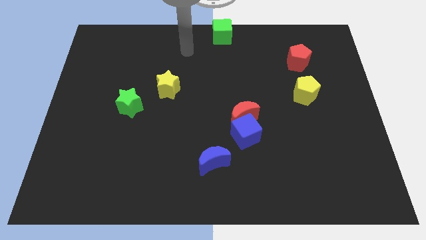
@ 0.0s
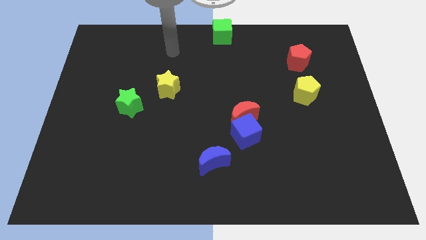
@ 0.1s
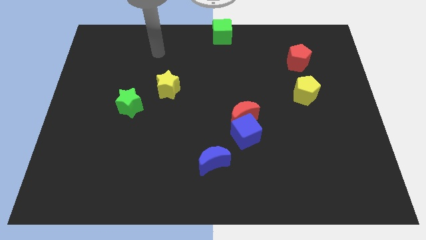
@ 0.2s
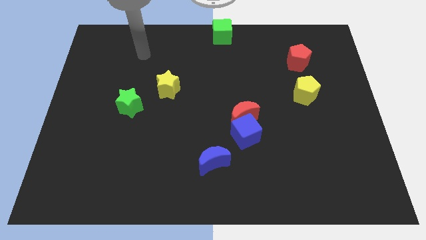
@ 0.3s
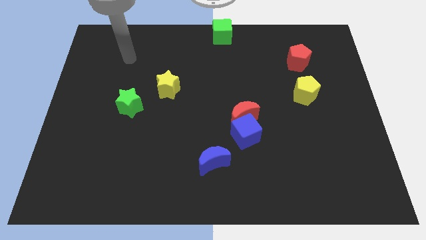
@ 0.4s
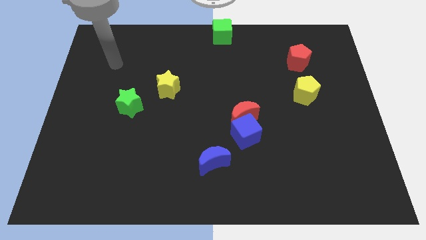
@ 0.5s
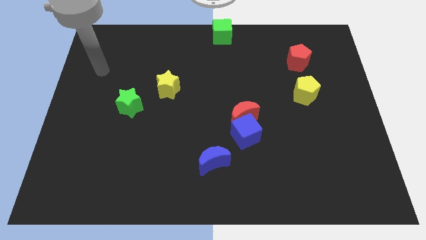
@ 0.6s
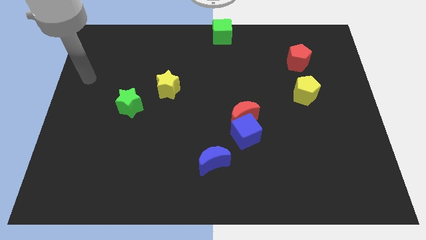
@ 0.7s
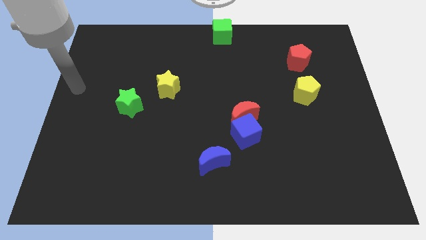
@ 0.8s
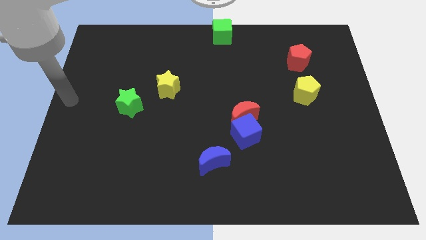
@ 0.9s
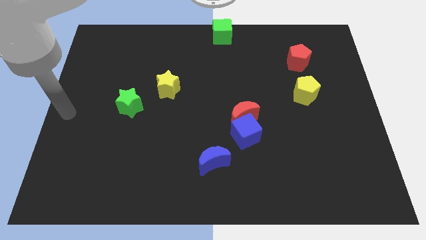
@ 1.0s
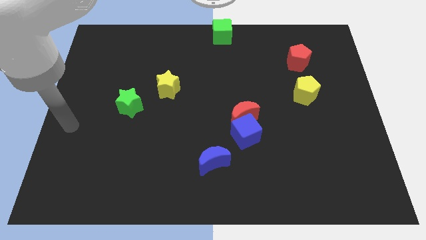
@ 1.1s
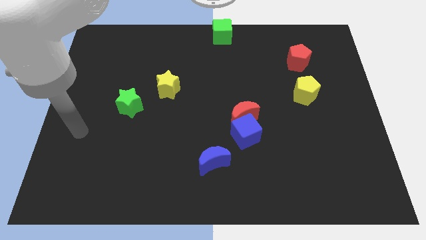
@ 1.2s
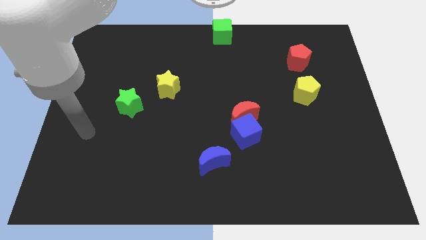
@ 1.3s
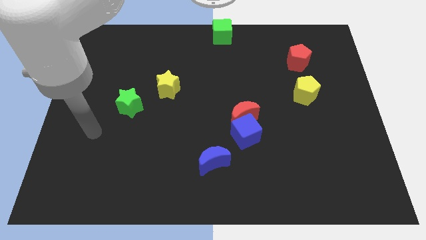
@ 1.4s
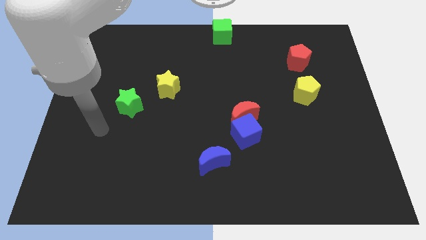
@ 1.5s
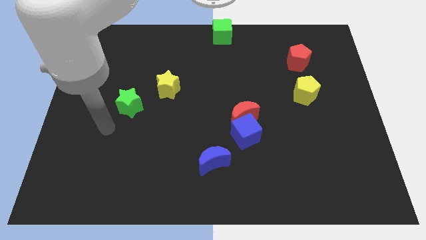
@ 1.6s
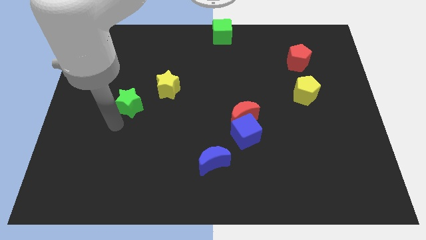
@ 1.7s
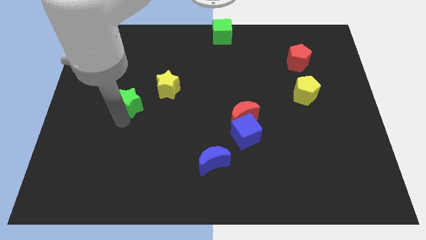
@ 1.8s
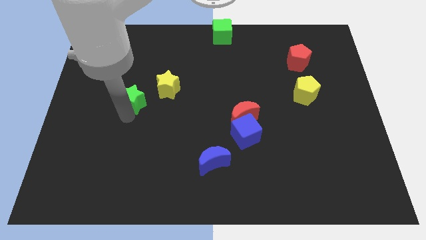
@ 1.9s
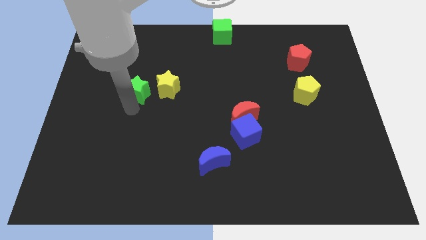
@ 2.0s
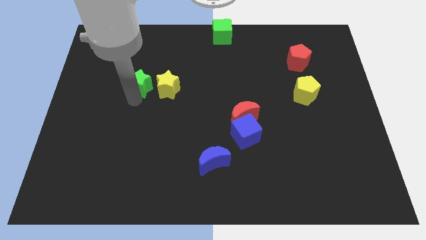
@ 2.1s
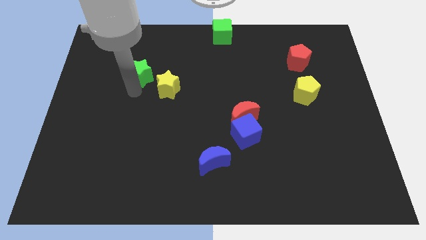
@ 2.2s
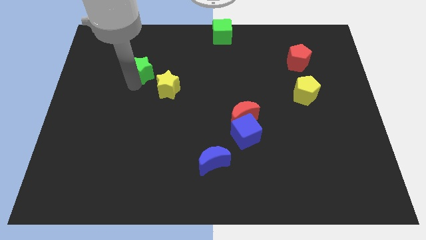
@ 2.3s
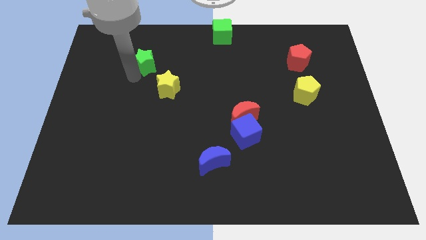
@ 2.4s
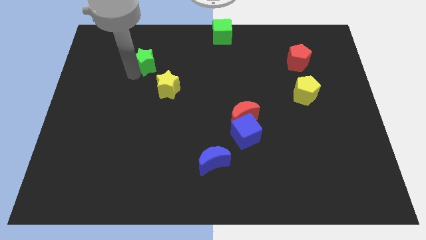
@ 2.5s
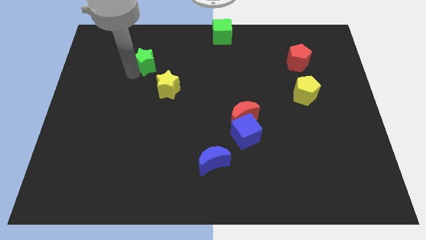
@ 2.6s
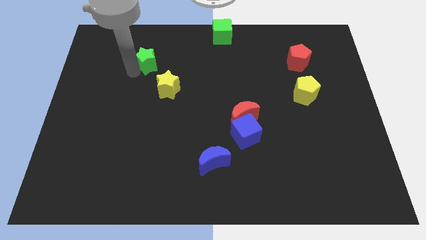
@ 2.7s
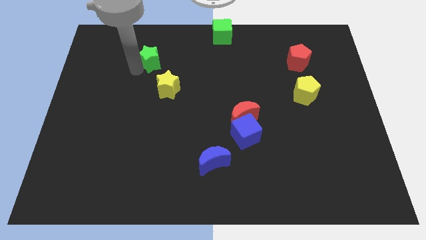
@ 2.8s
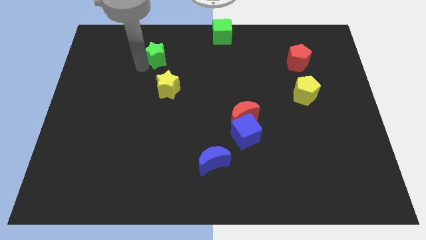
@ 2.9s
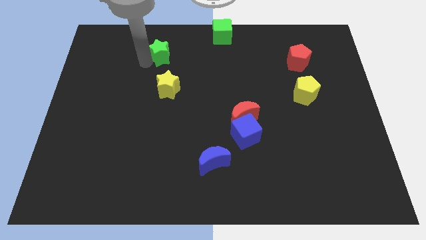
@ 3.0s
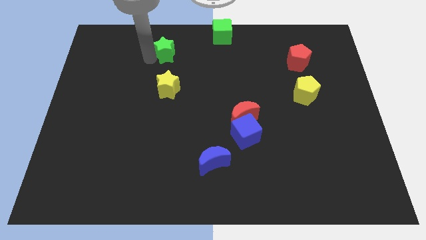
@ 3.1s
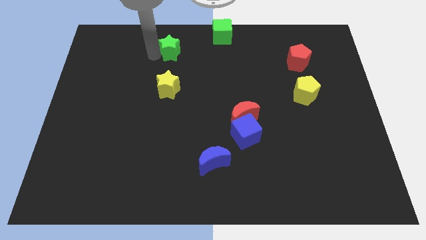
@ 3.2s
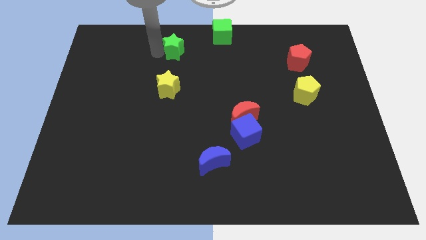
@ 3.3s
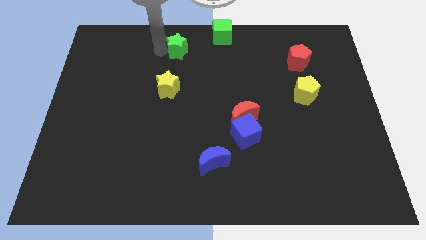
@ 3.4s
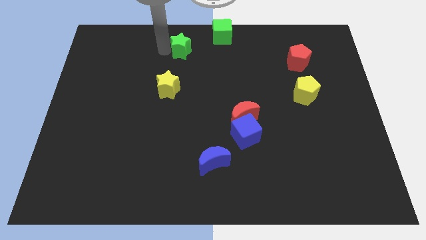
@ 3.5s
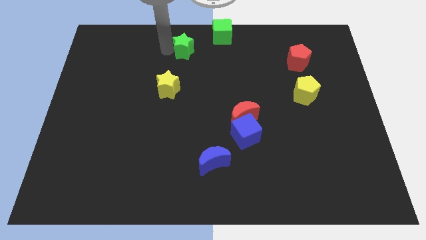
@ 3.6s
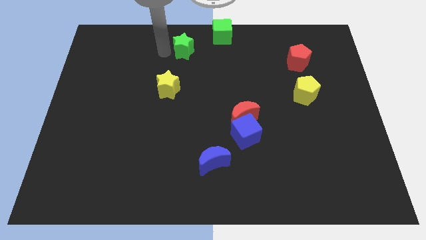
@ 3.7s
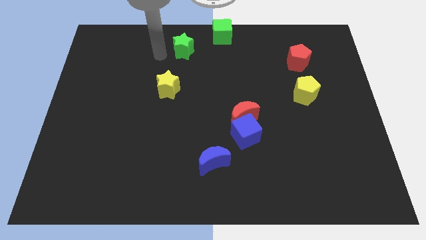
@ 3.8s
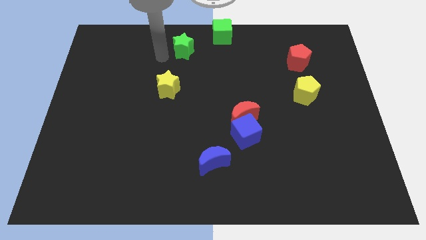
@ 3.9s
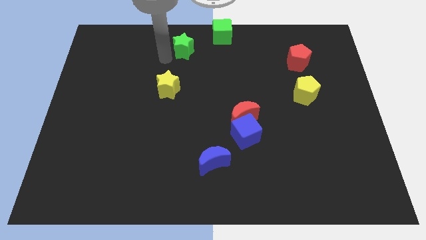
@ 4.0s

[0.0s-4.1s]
move the green star parallel bottom left to the green cube

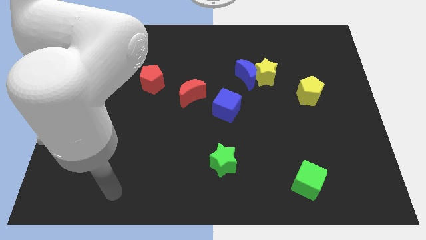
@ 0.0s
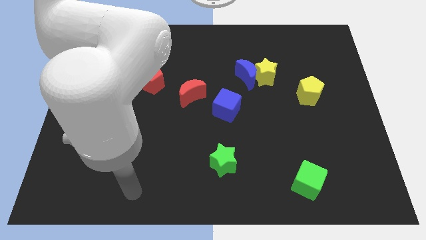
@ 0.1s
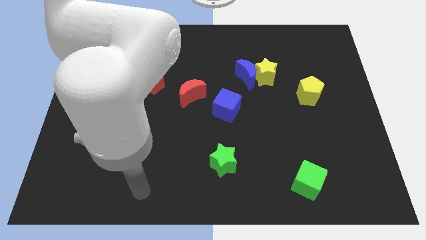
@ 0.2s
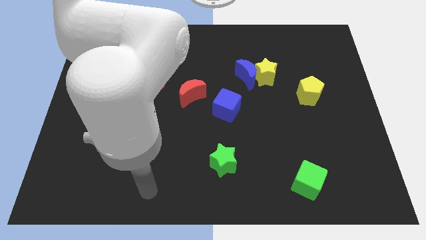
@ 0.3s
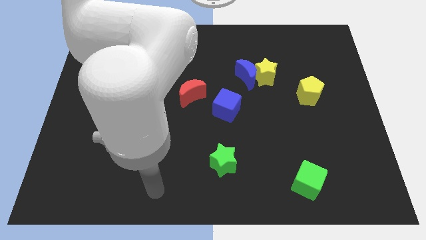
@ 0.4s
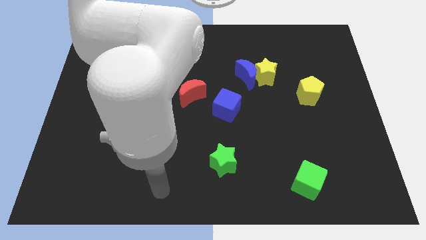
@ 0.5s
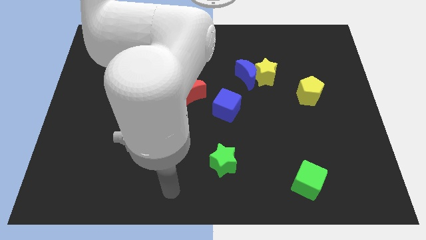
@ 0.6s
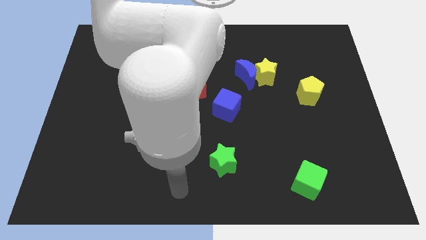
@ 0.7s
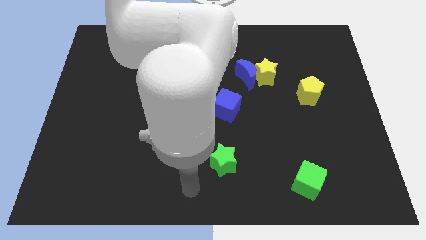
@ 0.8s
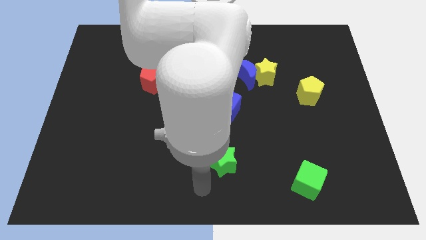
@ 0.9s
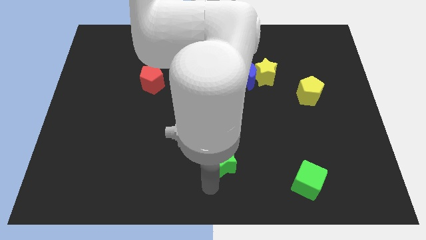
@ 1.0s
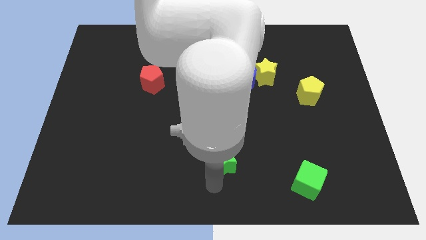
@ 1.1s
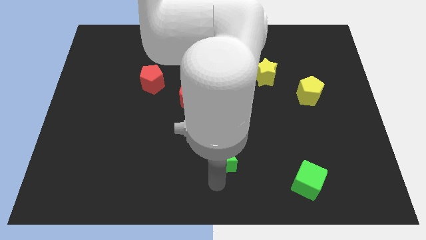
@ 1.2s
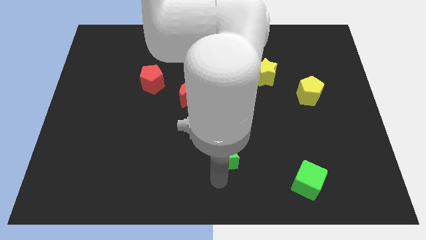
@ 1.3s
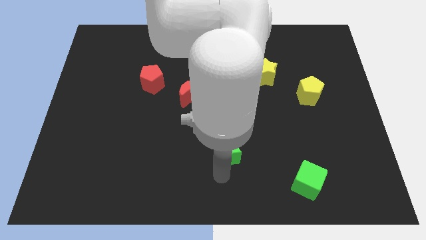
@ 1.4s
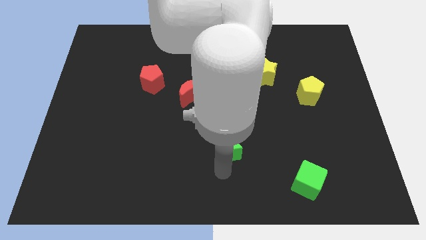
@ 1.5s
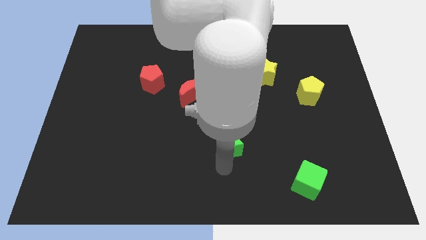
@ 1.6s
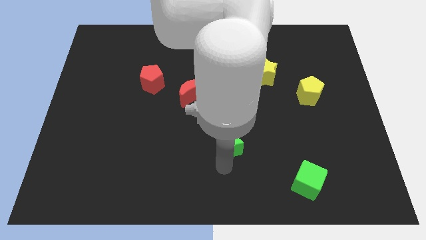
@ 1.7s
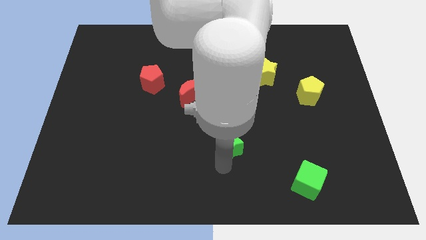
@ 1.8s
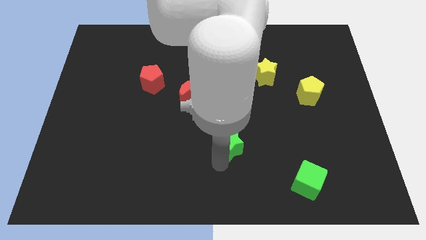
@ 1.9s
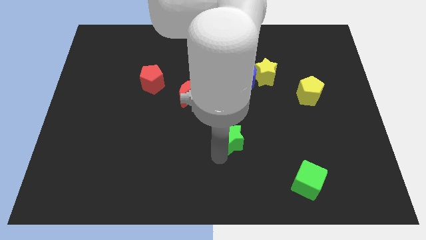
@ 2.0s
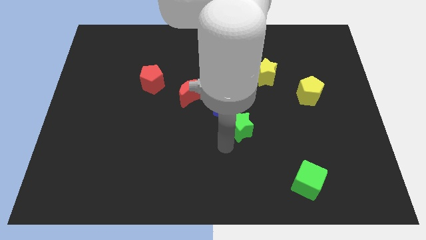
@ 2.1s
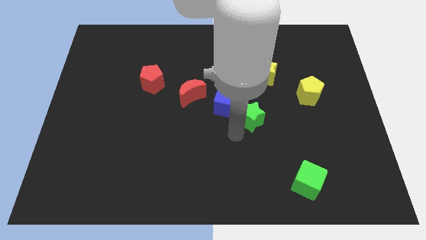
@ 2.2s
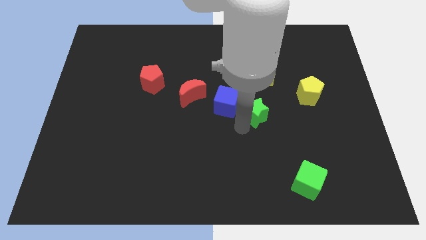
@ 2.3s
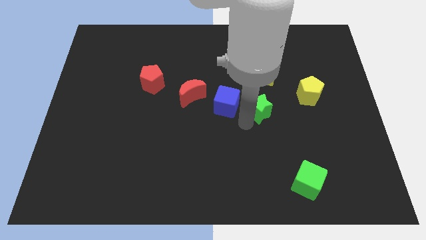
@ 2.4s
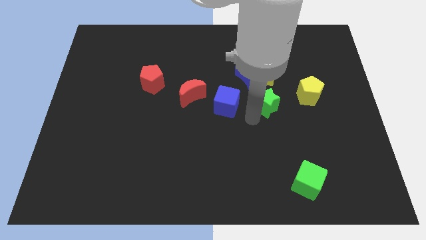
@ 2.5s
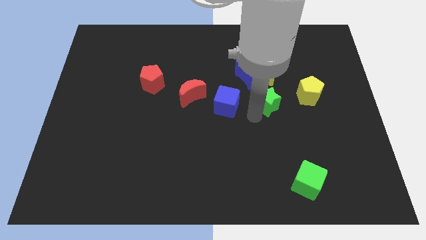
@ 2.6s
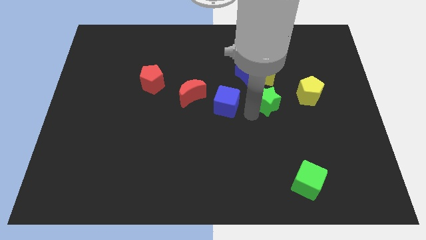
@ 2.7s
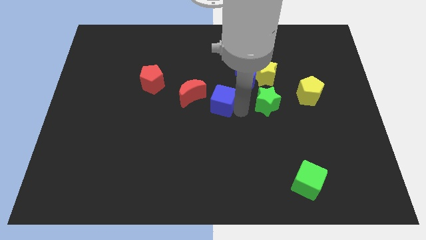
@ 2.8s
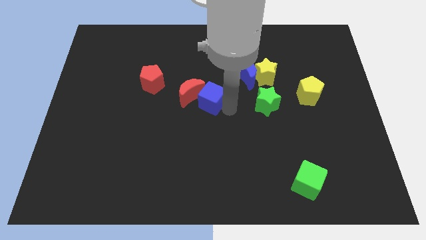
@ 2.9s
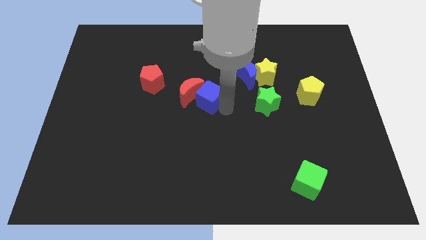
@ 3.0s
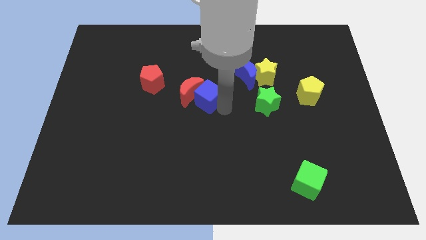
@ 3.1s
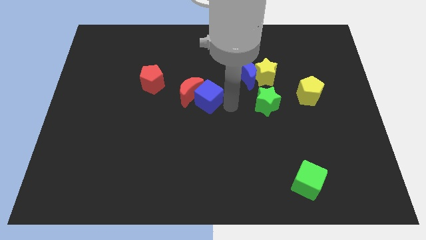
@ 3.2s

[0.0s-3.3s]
place the green star to right side of the blue cube

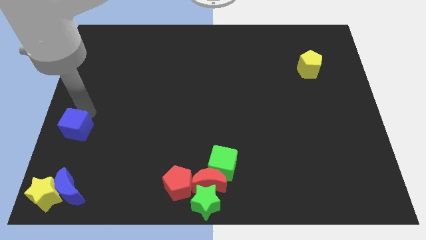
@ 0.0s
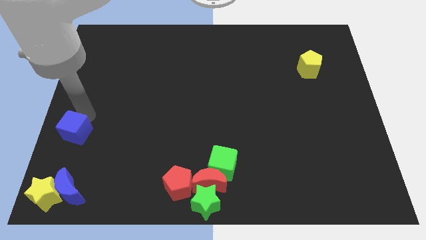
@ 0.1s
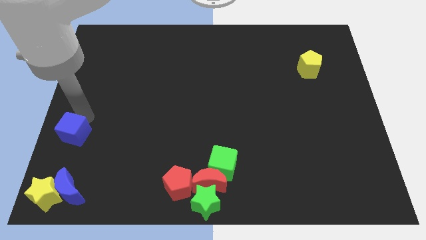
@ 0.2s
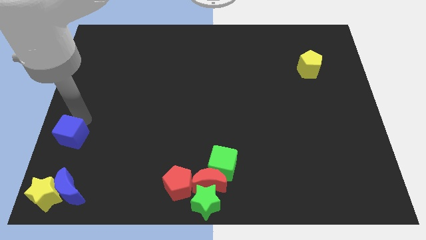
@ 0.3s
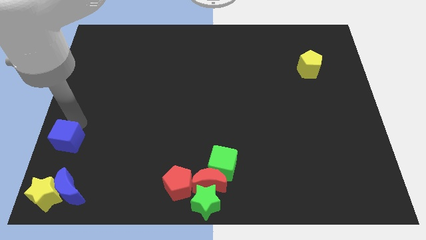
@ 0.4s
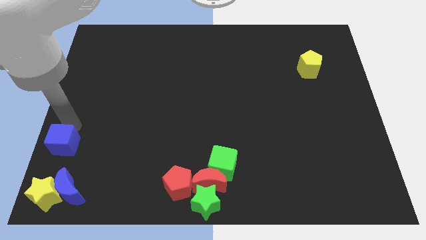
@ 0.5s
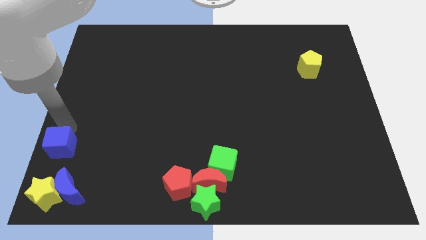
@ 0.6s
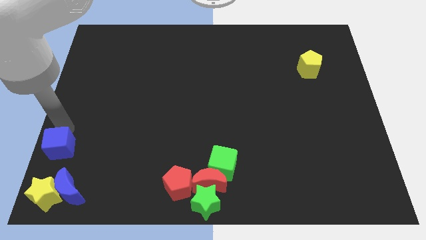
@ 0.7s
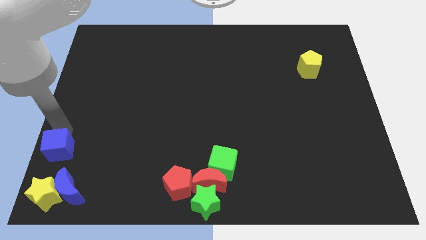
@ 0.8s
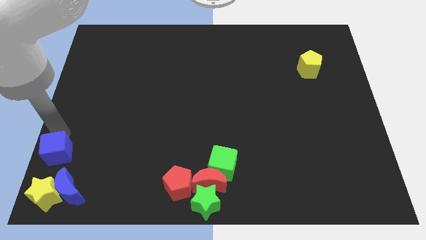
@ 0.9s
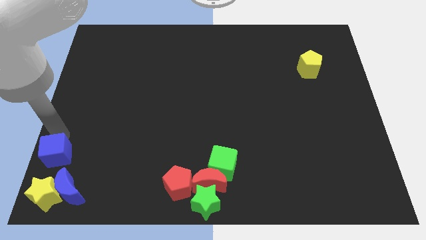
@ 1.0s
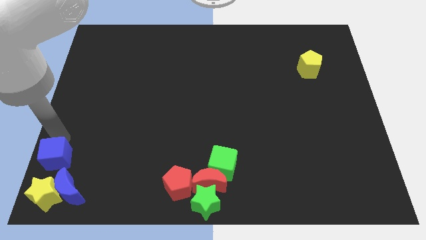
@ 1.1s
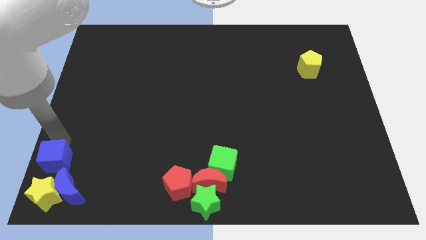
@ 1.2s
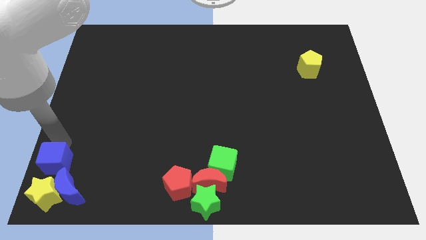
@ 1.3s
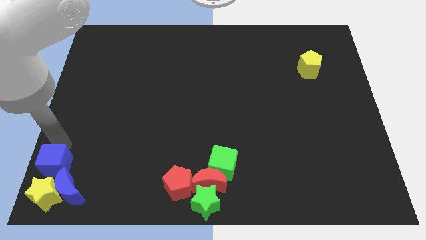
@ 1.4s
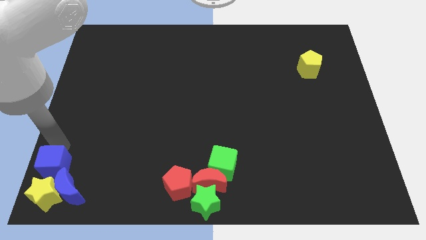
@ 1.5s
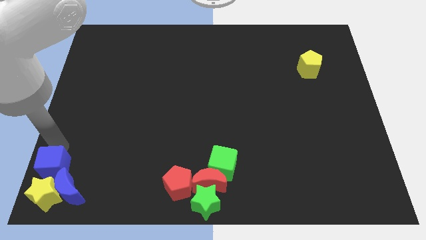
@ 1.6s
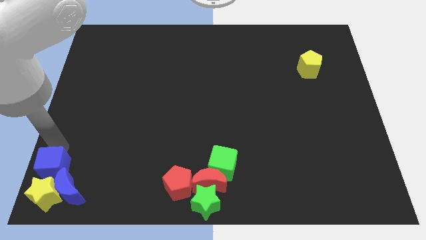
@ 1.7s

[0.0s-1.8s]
place the blue cube on top of the yellow star
